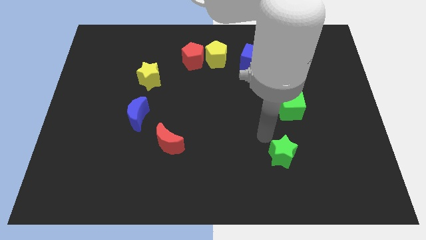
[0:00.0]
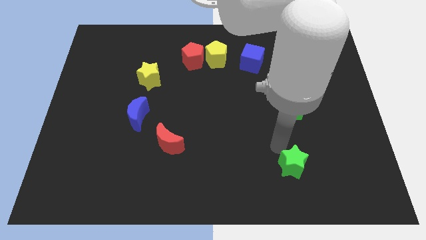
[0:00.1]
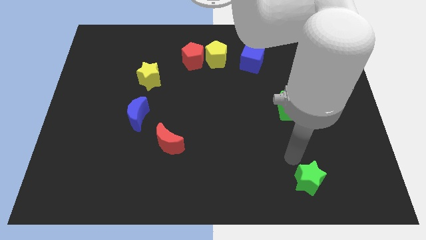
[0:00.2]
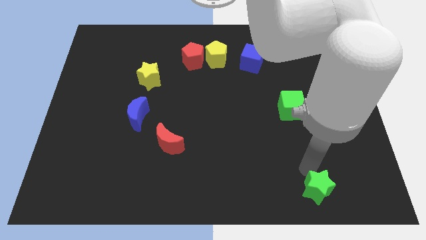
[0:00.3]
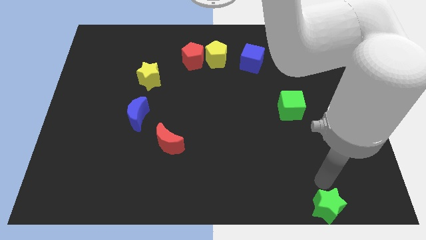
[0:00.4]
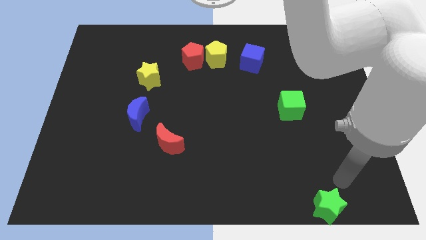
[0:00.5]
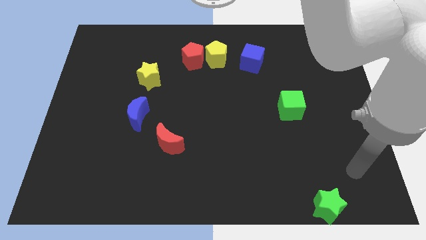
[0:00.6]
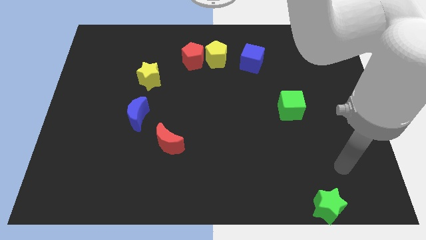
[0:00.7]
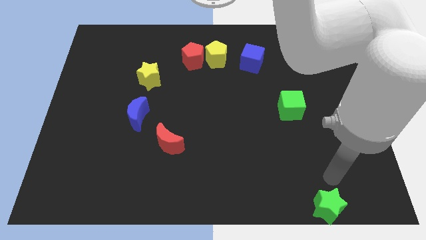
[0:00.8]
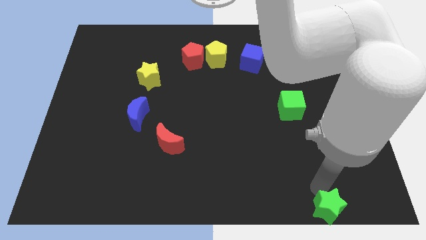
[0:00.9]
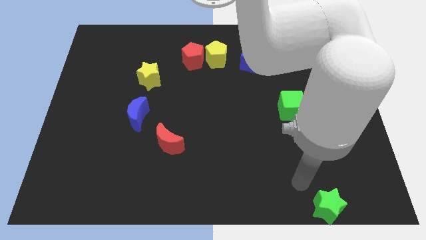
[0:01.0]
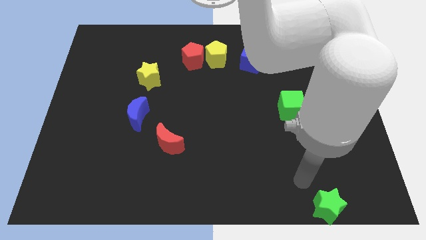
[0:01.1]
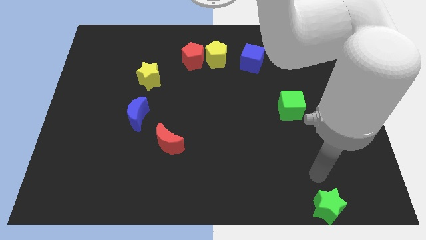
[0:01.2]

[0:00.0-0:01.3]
push the green star downward

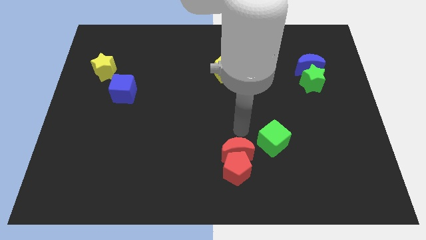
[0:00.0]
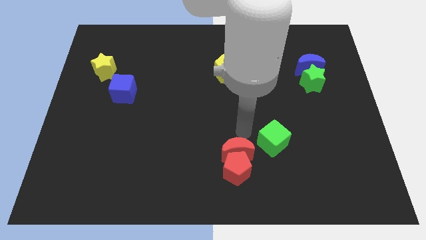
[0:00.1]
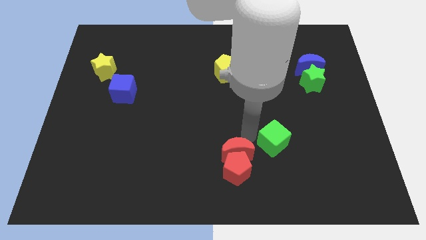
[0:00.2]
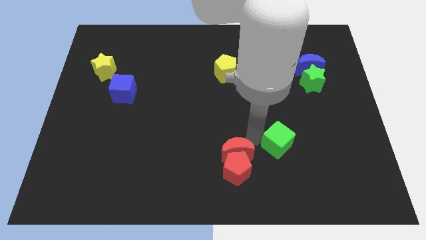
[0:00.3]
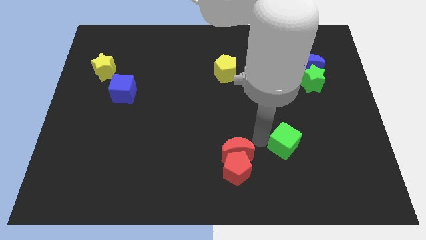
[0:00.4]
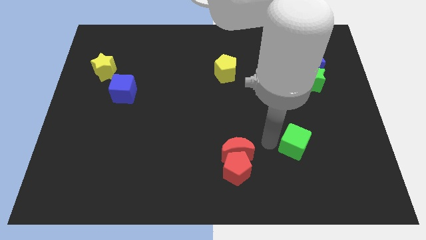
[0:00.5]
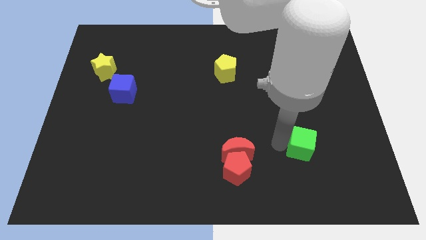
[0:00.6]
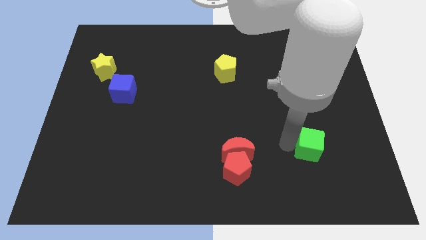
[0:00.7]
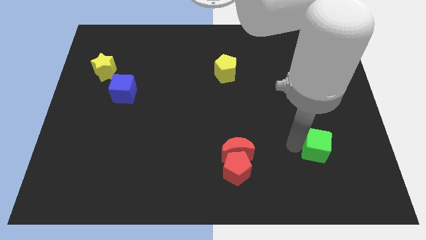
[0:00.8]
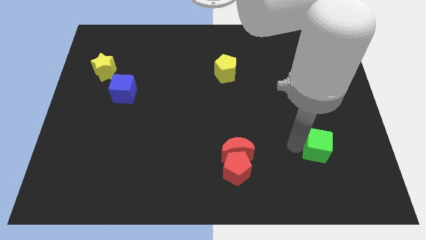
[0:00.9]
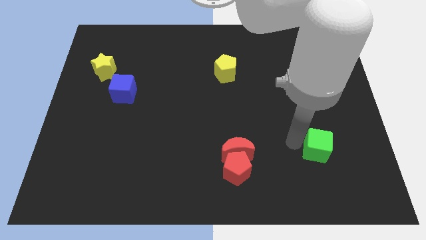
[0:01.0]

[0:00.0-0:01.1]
move green cube to right side

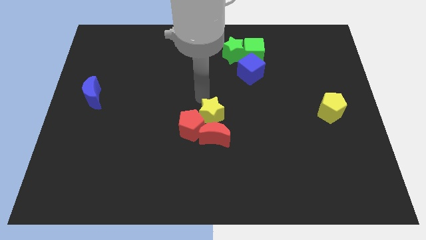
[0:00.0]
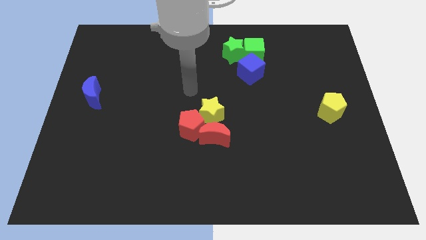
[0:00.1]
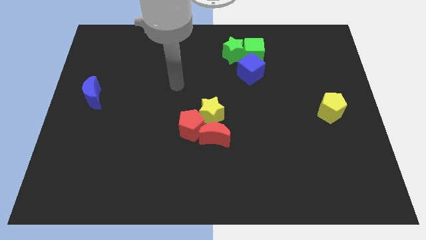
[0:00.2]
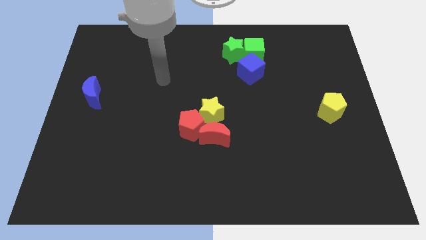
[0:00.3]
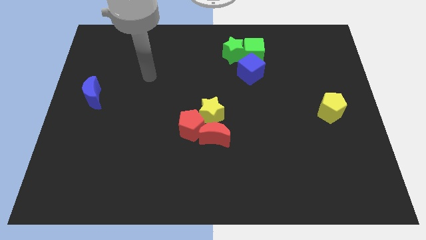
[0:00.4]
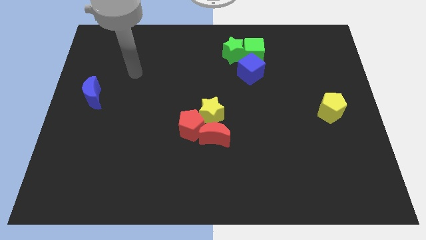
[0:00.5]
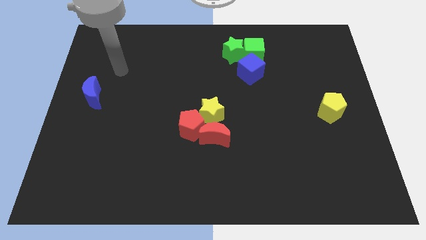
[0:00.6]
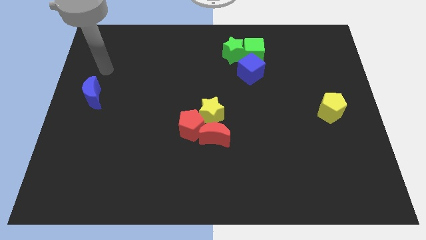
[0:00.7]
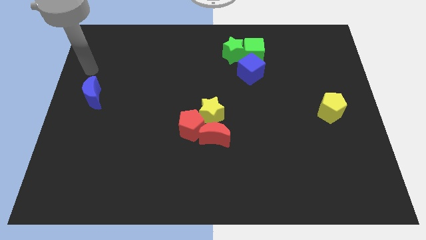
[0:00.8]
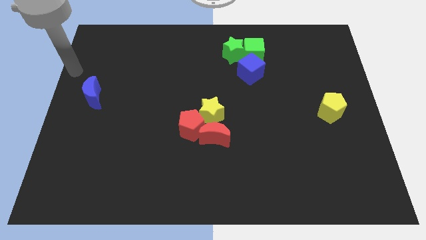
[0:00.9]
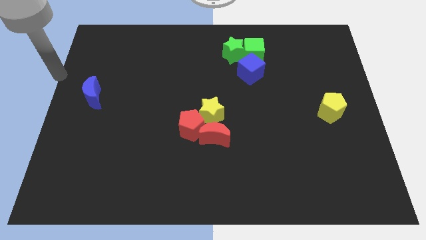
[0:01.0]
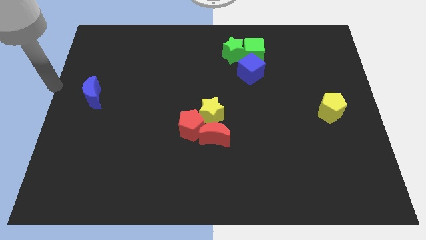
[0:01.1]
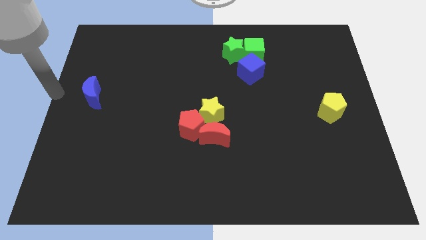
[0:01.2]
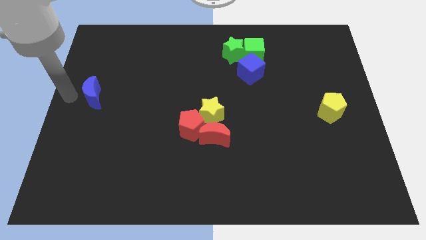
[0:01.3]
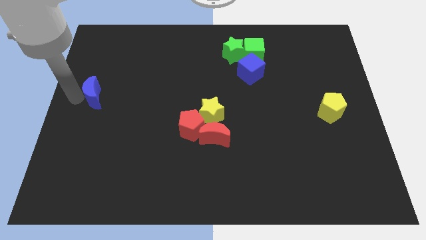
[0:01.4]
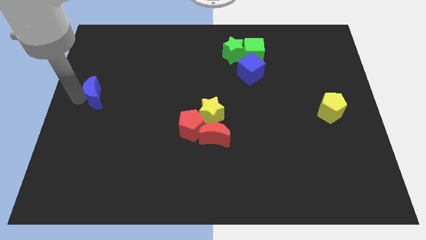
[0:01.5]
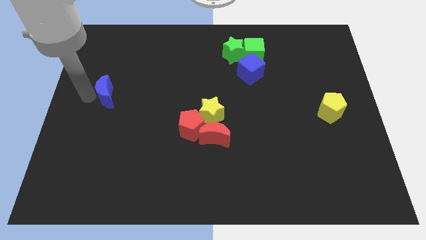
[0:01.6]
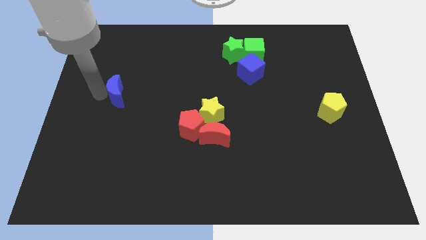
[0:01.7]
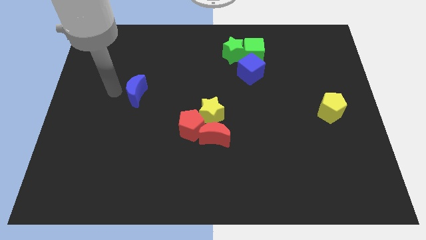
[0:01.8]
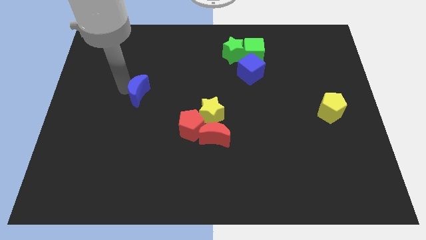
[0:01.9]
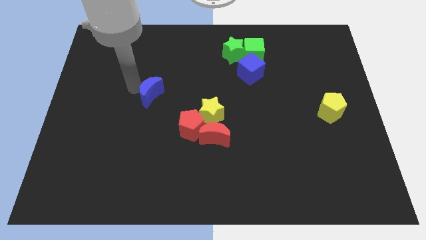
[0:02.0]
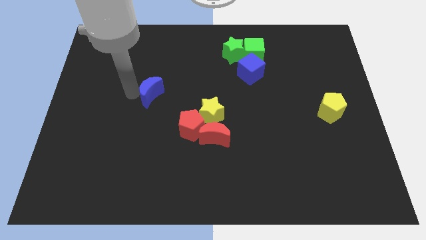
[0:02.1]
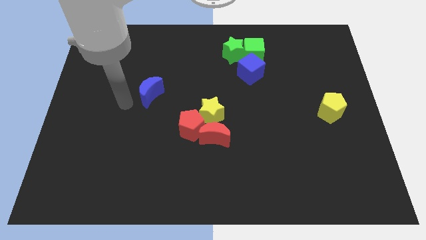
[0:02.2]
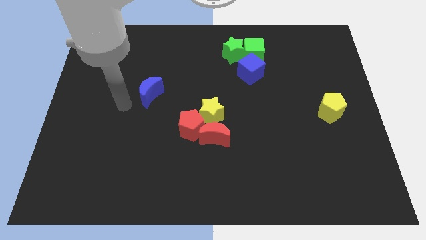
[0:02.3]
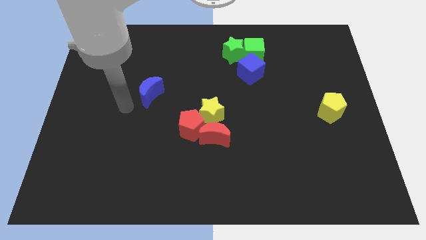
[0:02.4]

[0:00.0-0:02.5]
move the blue crescent slightly towards the right side of the board

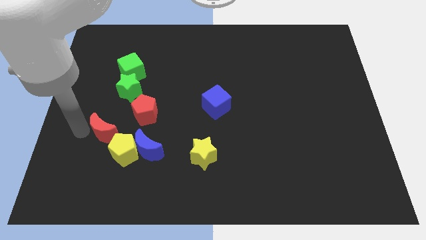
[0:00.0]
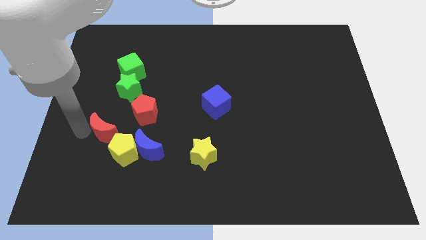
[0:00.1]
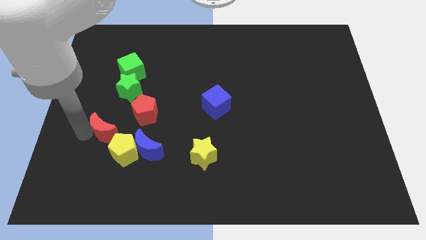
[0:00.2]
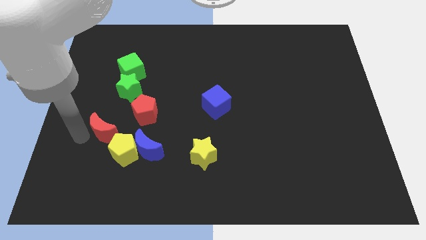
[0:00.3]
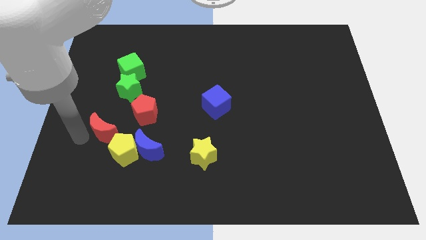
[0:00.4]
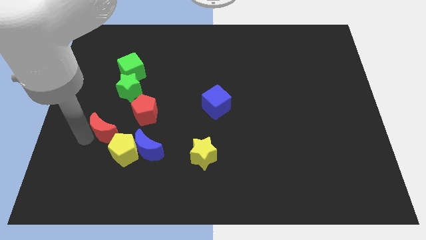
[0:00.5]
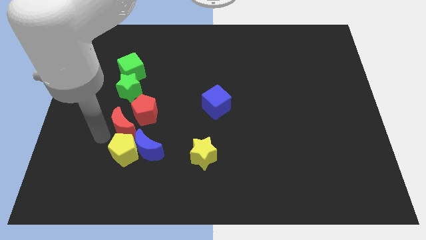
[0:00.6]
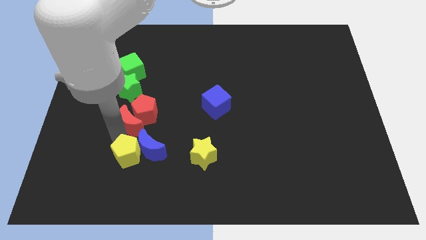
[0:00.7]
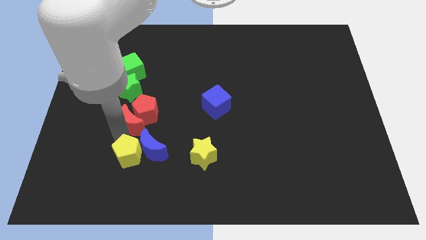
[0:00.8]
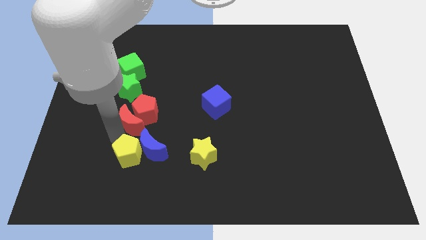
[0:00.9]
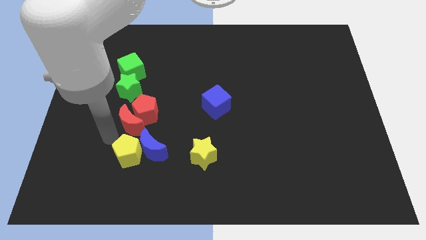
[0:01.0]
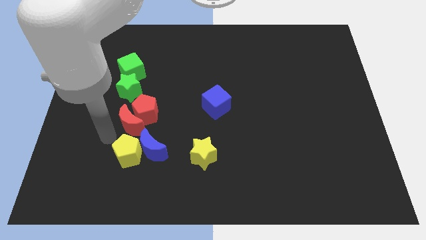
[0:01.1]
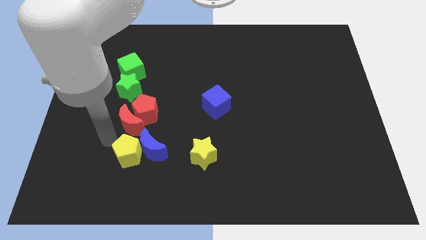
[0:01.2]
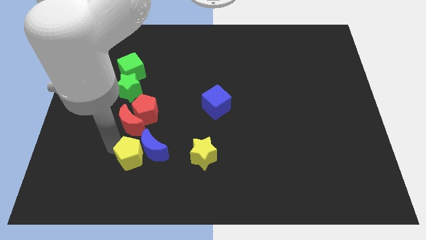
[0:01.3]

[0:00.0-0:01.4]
push the red crescent next to the red pentagon

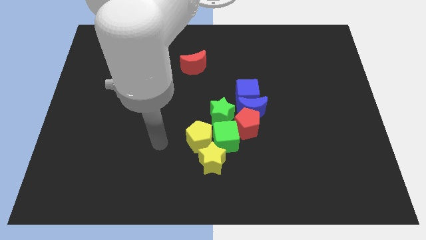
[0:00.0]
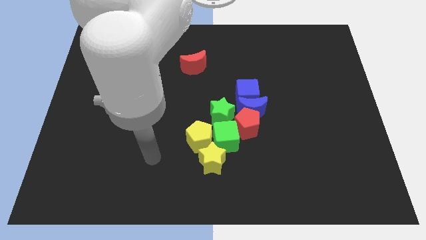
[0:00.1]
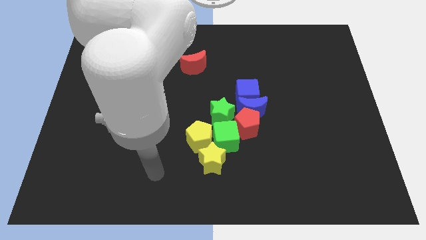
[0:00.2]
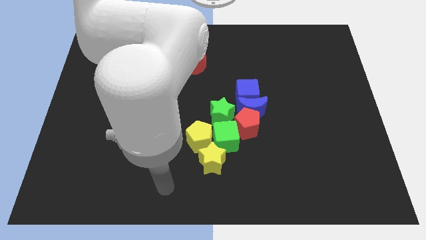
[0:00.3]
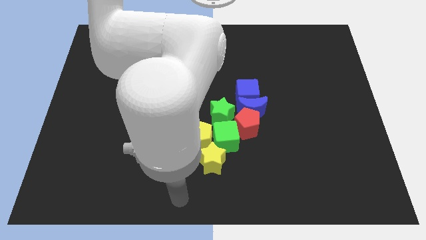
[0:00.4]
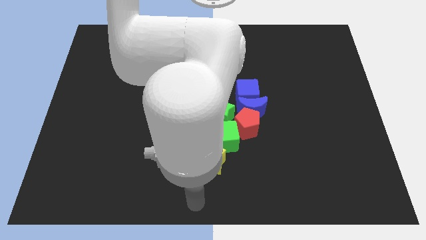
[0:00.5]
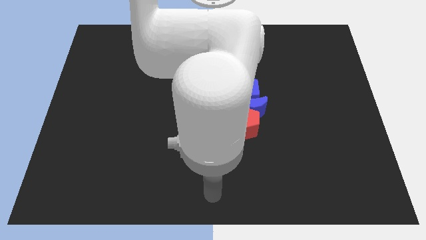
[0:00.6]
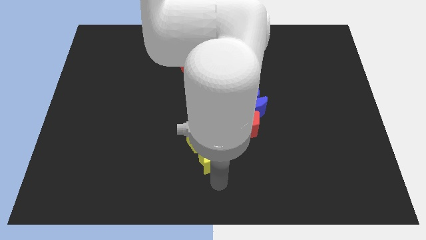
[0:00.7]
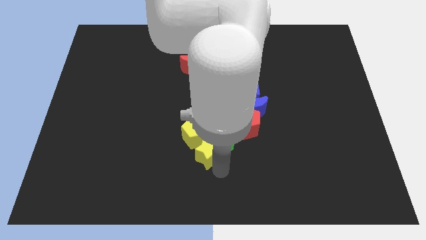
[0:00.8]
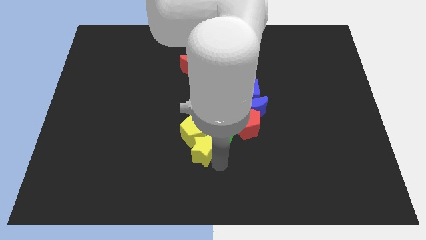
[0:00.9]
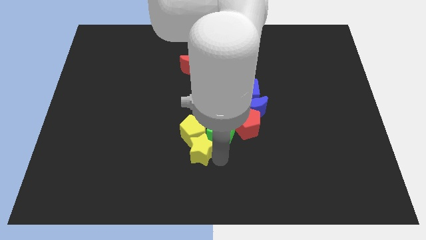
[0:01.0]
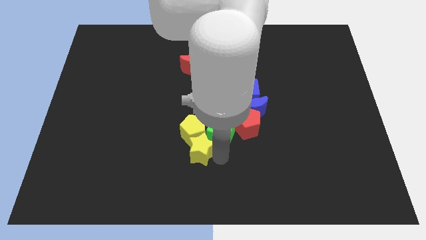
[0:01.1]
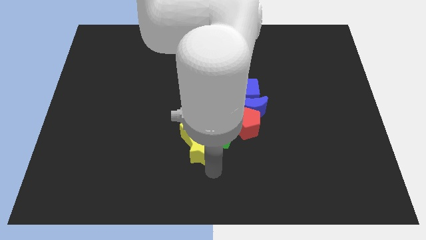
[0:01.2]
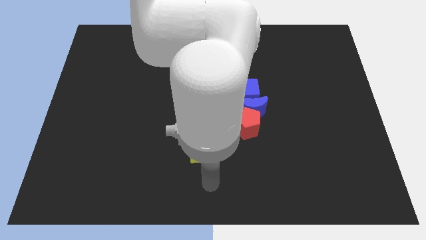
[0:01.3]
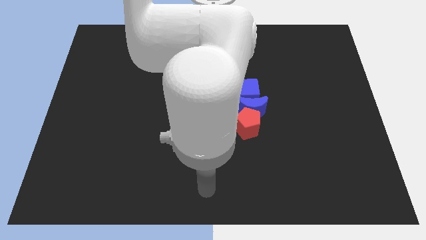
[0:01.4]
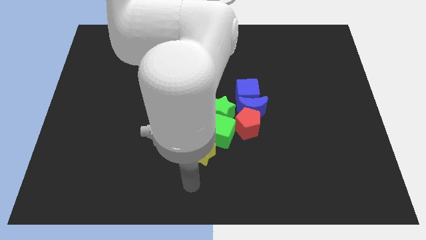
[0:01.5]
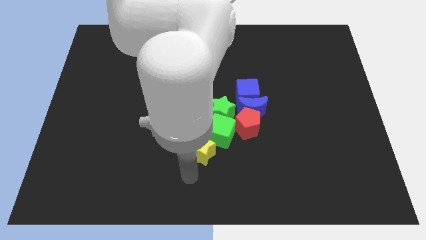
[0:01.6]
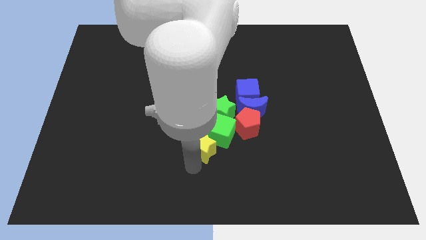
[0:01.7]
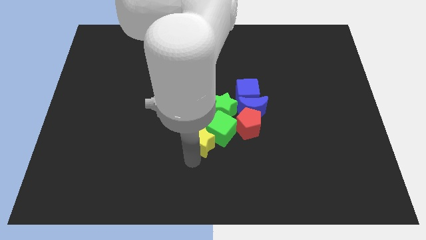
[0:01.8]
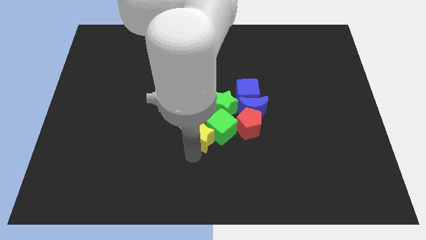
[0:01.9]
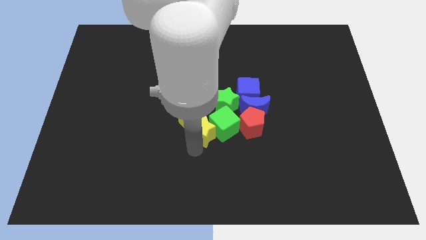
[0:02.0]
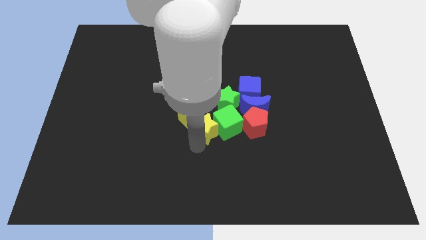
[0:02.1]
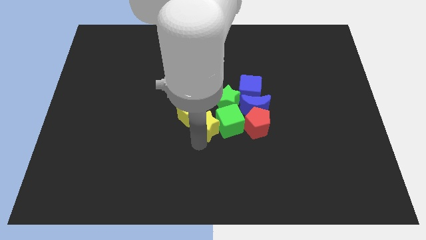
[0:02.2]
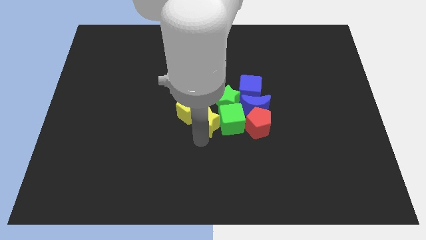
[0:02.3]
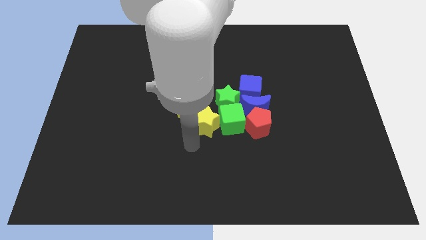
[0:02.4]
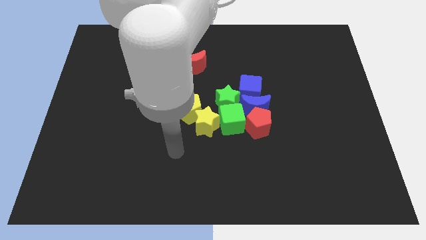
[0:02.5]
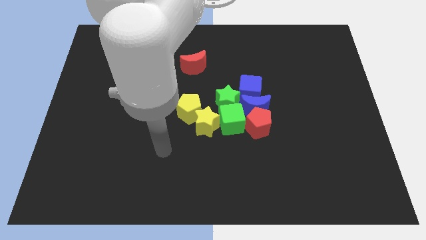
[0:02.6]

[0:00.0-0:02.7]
push the yellow star to the center along with the yellow pentagon left to the green cube

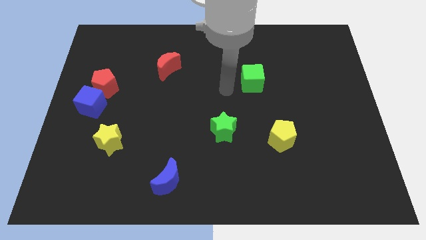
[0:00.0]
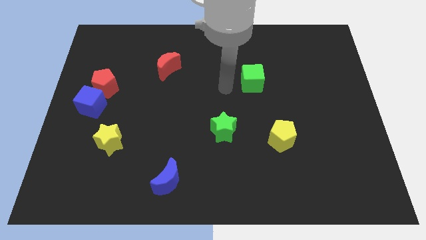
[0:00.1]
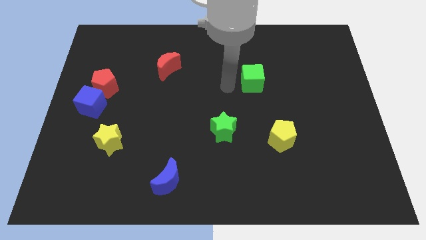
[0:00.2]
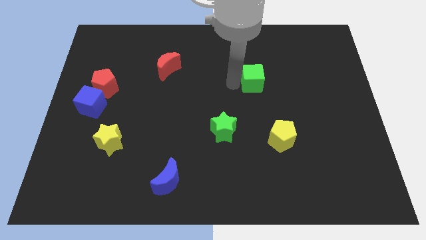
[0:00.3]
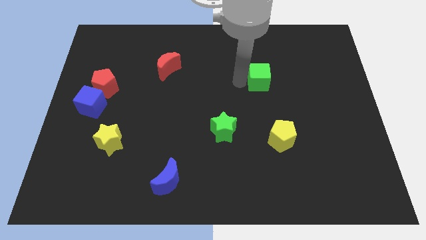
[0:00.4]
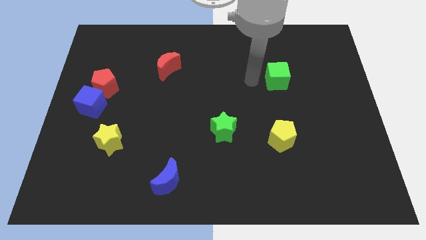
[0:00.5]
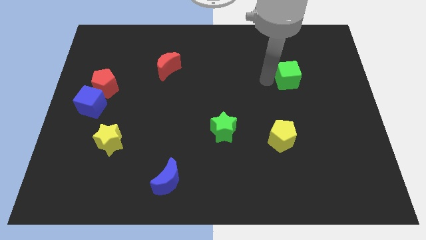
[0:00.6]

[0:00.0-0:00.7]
place the green cube above the yellow pentagon
